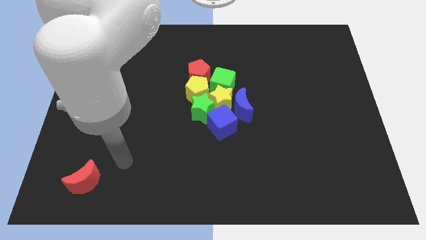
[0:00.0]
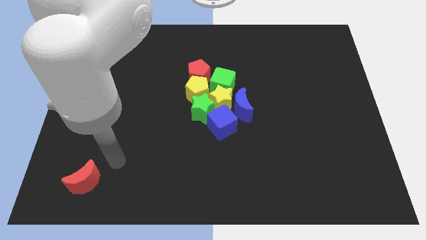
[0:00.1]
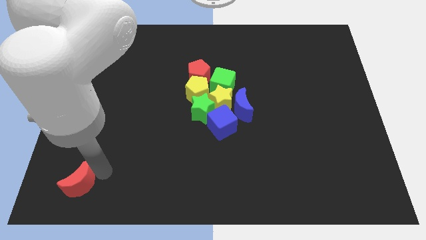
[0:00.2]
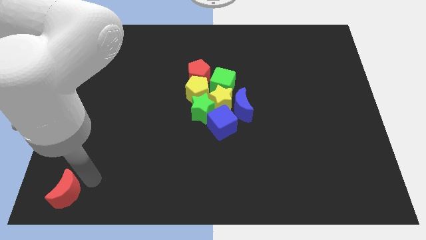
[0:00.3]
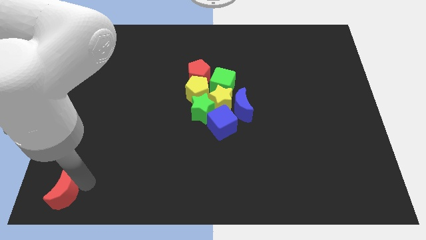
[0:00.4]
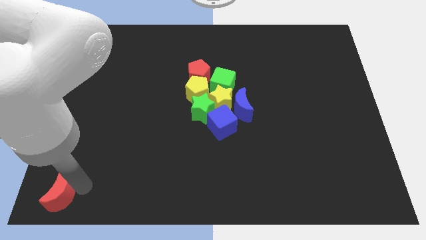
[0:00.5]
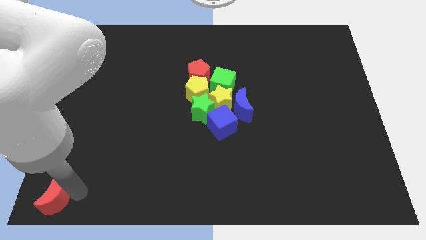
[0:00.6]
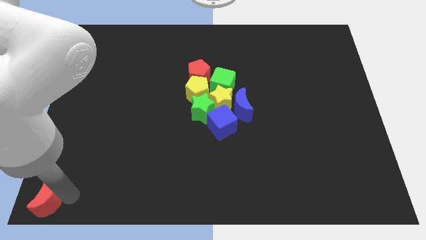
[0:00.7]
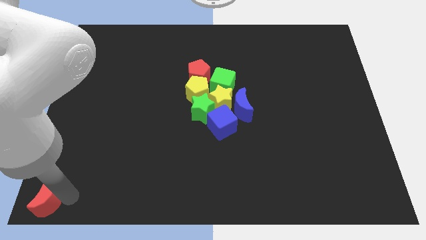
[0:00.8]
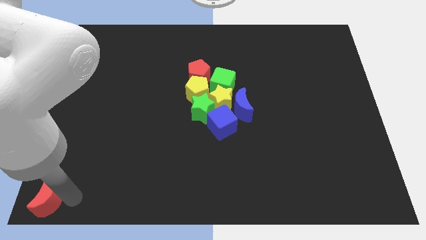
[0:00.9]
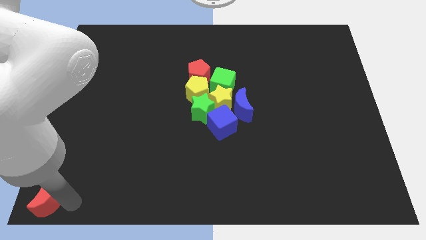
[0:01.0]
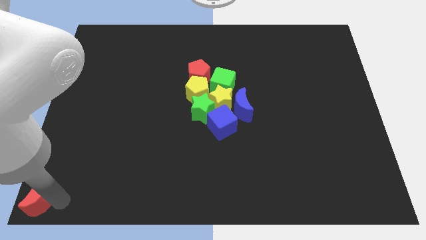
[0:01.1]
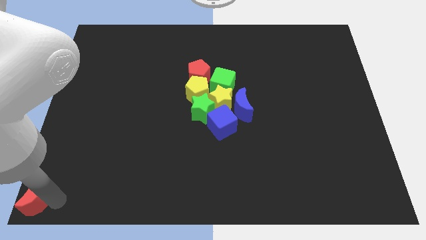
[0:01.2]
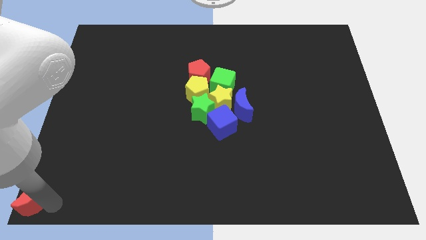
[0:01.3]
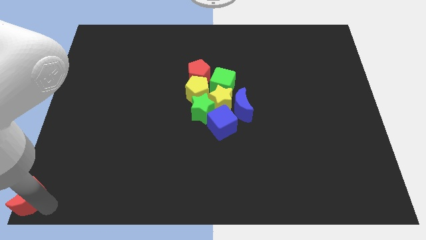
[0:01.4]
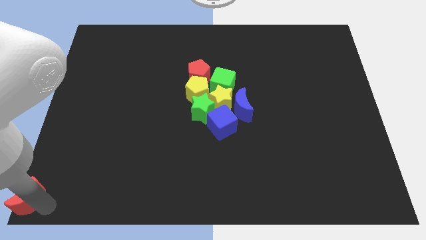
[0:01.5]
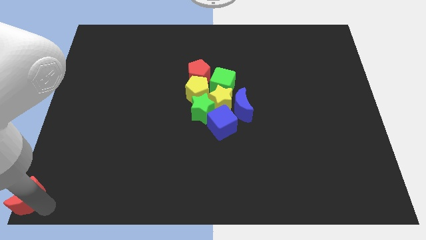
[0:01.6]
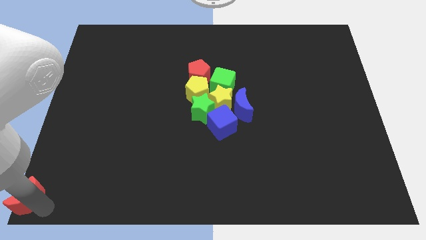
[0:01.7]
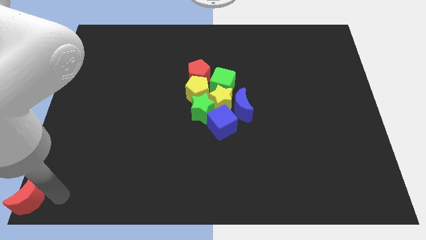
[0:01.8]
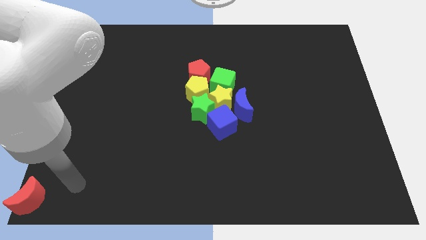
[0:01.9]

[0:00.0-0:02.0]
push the red crescent to the left bottom corner of the board

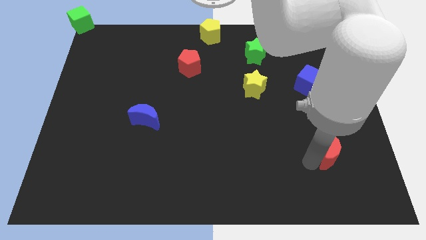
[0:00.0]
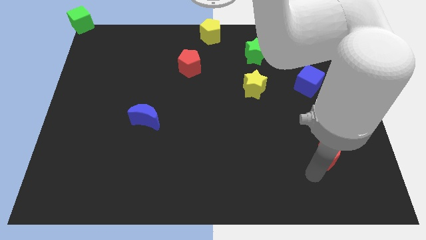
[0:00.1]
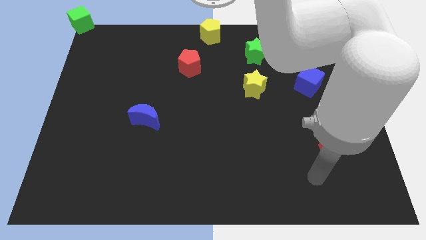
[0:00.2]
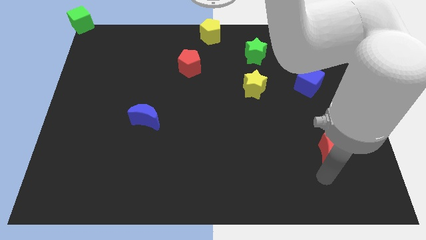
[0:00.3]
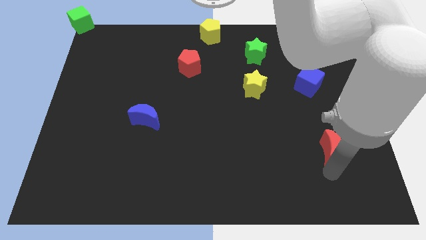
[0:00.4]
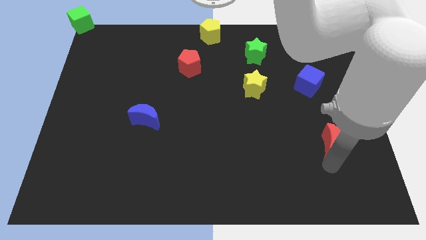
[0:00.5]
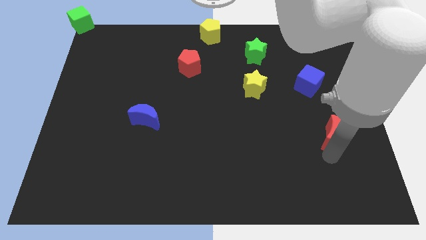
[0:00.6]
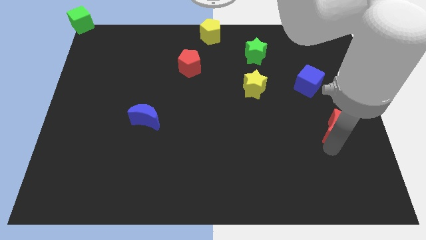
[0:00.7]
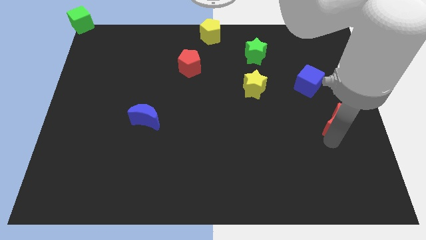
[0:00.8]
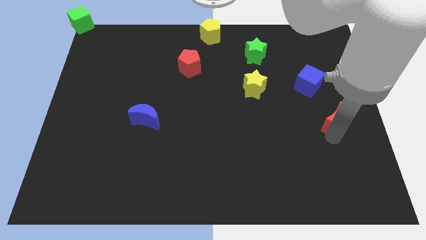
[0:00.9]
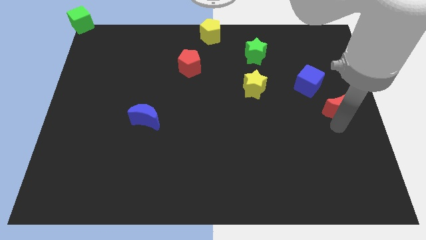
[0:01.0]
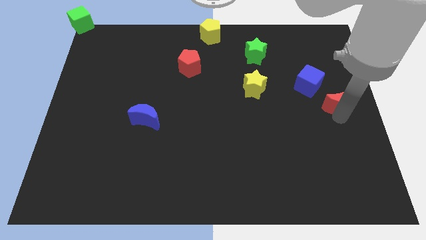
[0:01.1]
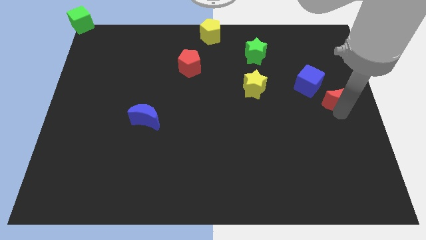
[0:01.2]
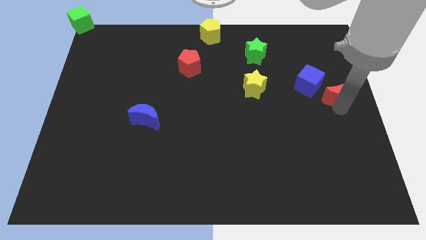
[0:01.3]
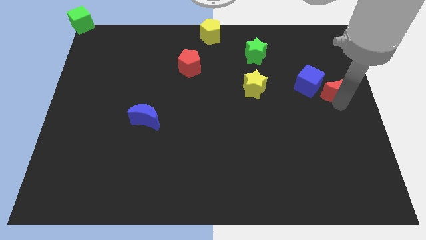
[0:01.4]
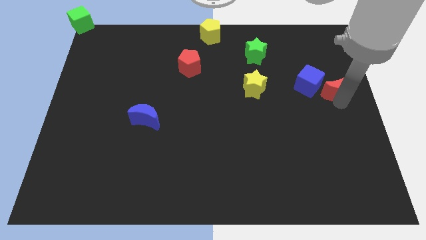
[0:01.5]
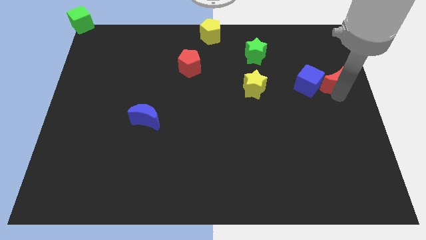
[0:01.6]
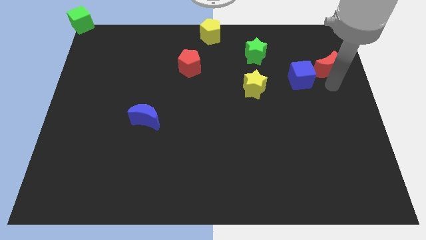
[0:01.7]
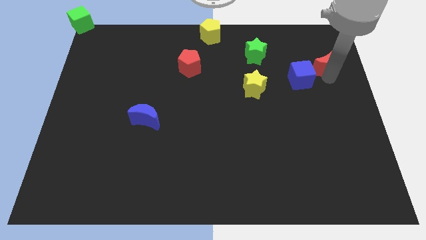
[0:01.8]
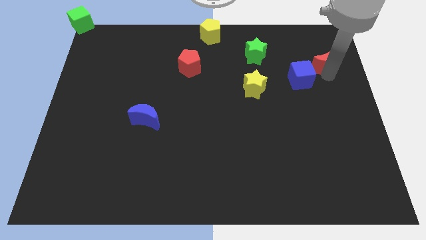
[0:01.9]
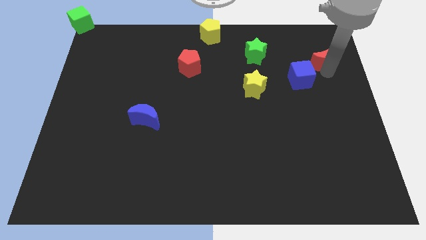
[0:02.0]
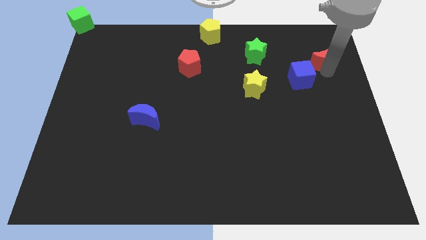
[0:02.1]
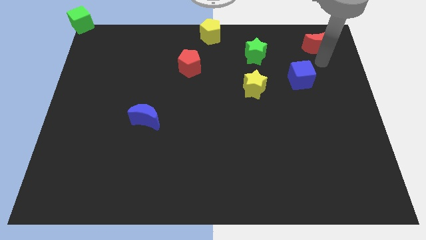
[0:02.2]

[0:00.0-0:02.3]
push the blue cube with the red crescent towards the top center

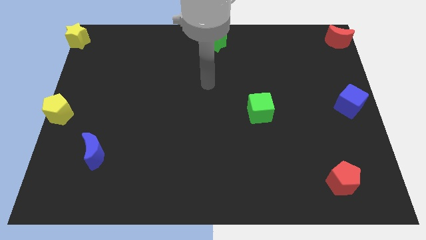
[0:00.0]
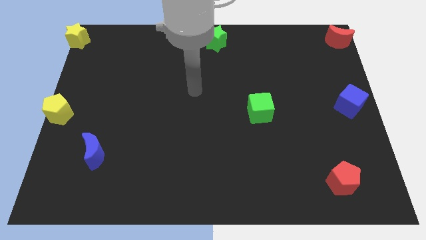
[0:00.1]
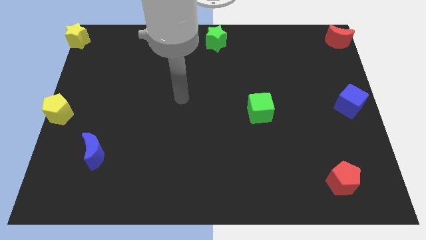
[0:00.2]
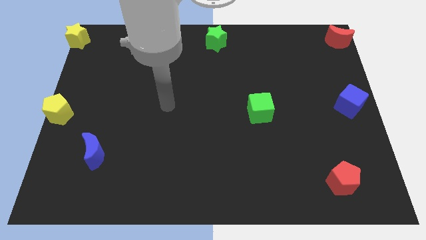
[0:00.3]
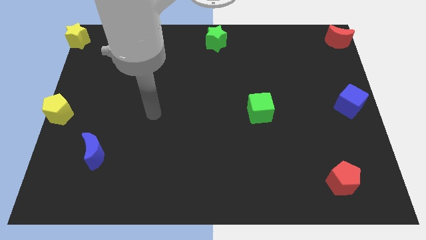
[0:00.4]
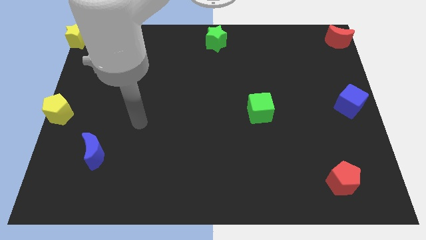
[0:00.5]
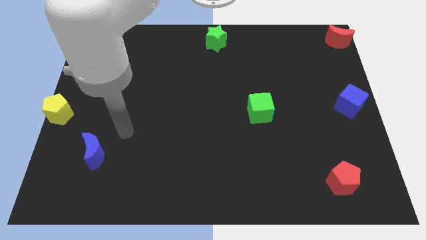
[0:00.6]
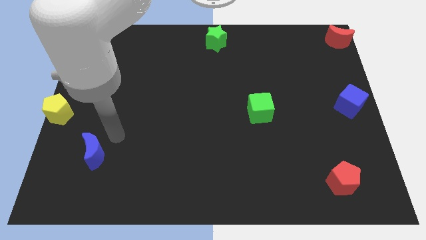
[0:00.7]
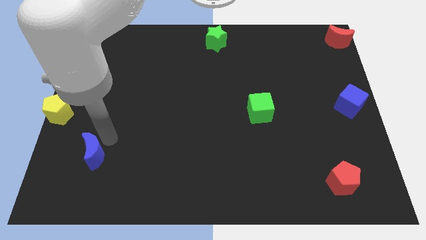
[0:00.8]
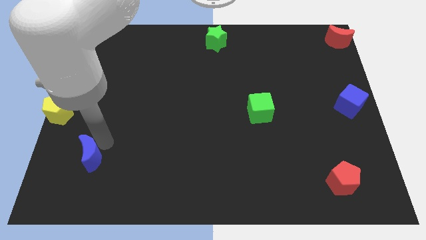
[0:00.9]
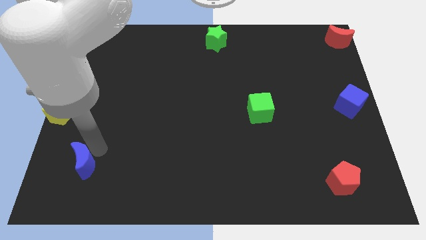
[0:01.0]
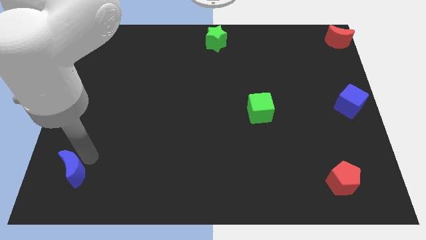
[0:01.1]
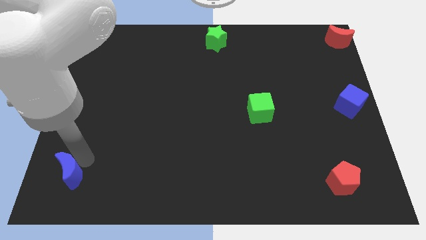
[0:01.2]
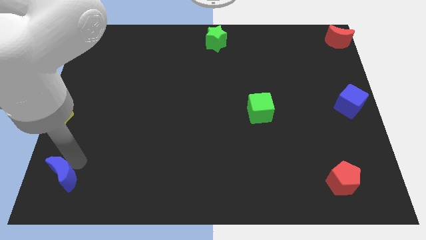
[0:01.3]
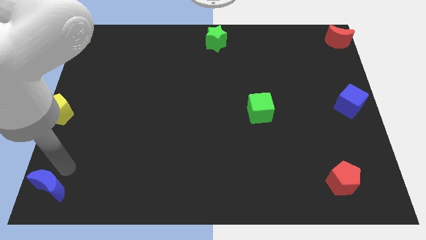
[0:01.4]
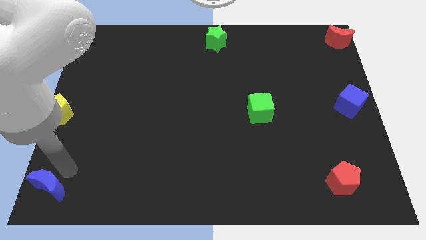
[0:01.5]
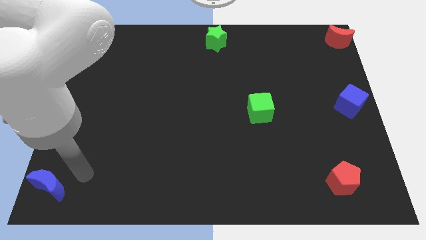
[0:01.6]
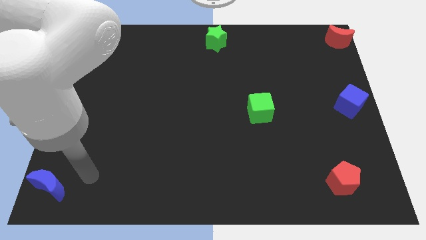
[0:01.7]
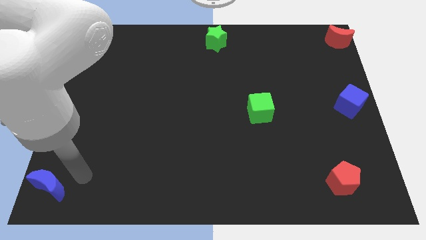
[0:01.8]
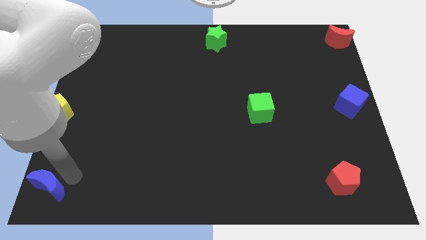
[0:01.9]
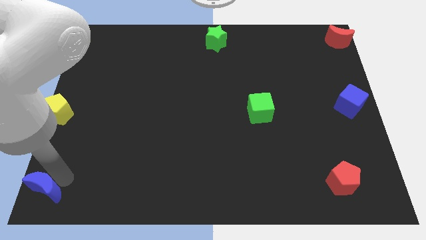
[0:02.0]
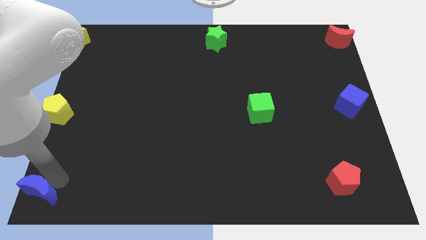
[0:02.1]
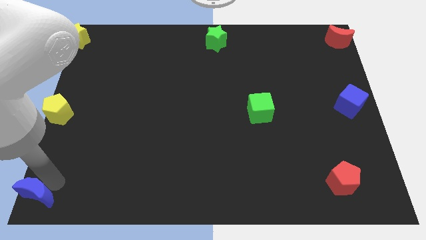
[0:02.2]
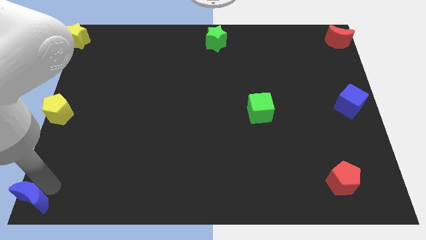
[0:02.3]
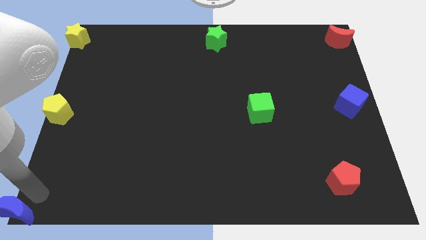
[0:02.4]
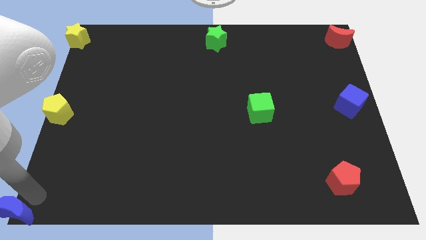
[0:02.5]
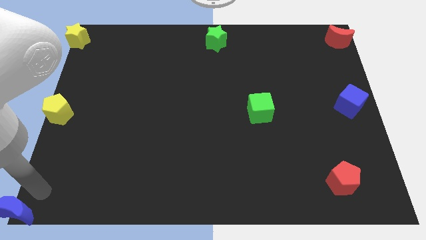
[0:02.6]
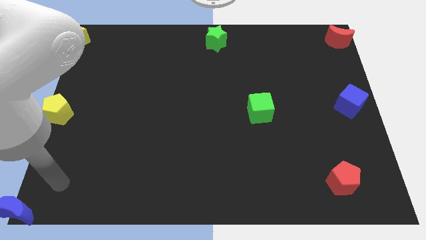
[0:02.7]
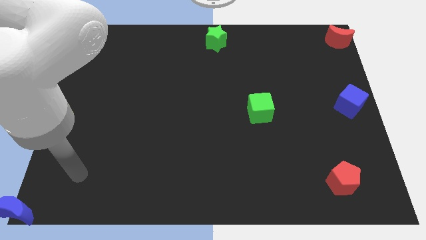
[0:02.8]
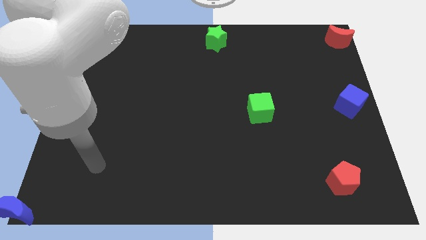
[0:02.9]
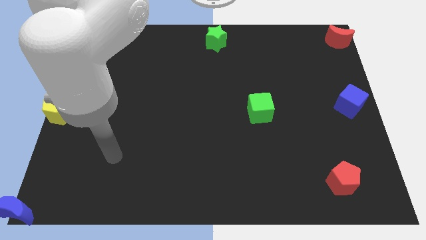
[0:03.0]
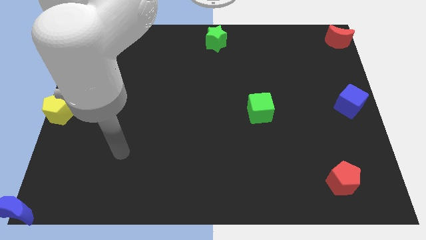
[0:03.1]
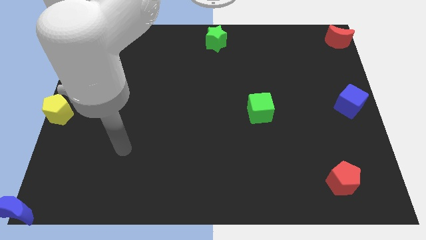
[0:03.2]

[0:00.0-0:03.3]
push the blue crescent to the bottom left of the board

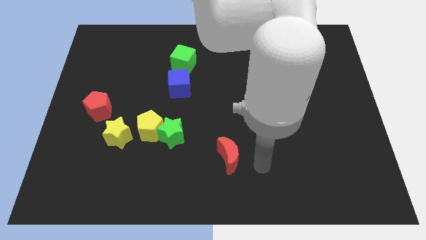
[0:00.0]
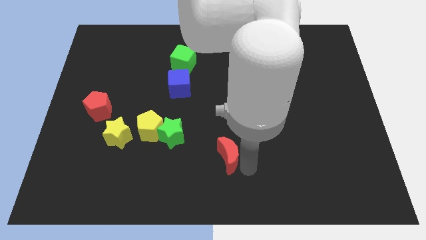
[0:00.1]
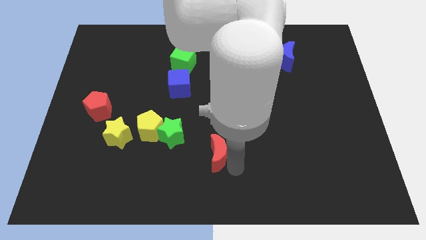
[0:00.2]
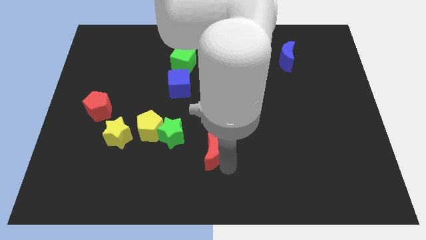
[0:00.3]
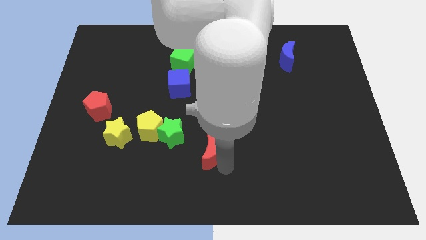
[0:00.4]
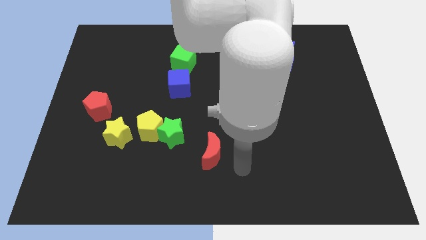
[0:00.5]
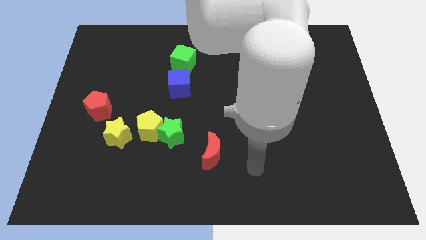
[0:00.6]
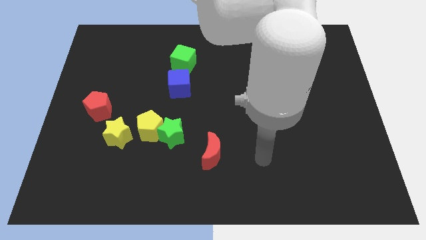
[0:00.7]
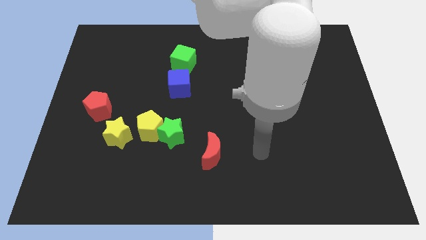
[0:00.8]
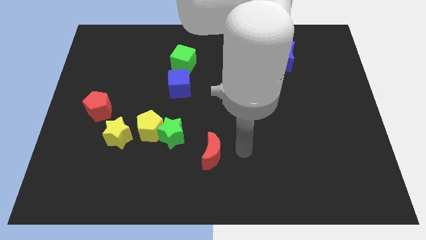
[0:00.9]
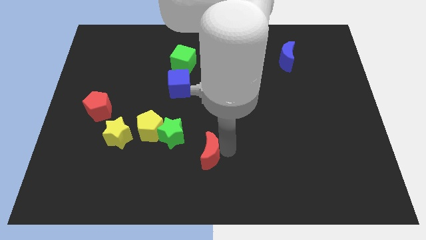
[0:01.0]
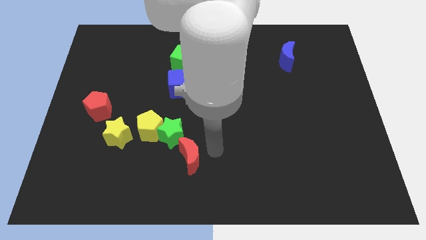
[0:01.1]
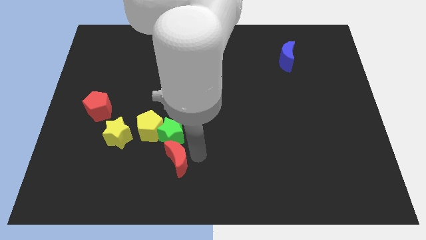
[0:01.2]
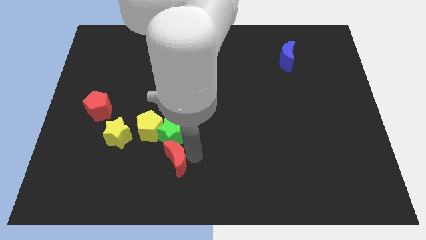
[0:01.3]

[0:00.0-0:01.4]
push the red moon below the green star
